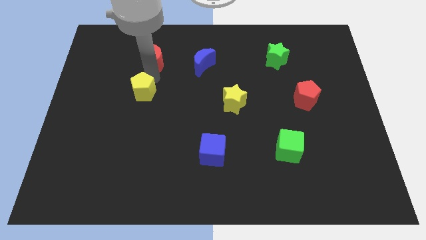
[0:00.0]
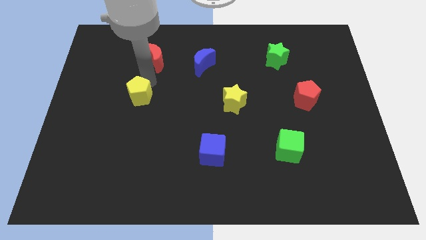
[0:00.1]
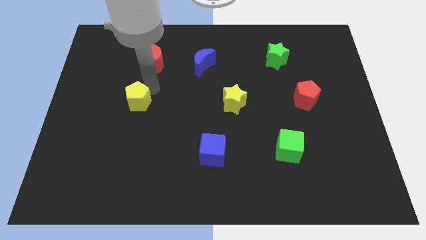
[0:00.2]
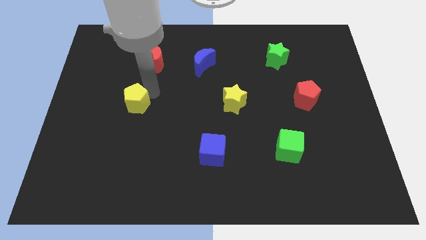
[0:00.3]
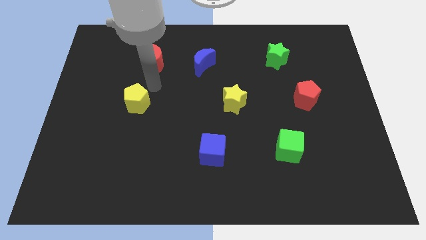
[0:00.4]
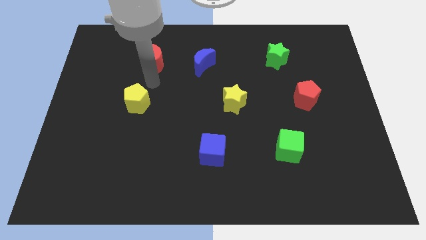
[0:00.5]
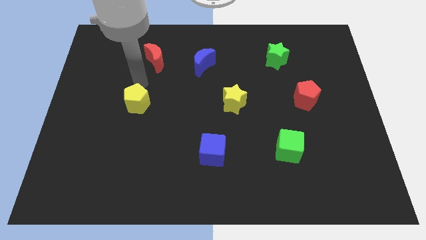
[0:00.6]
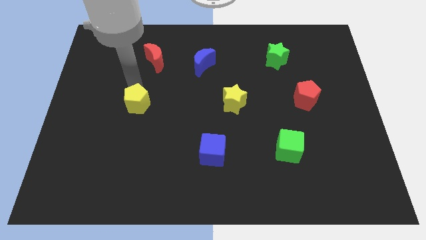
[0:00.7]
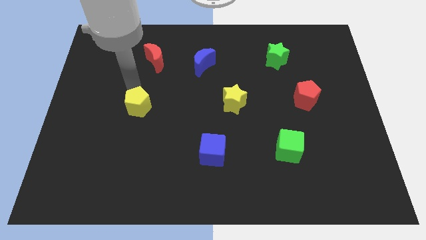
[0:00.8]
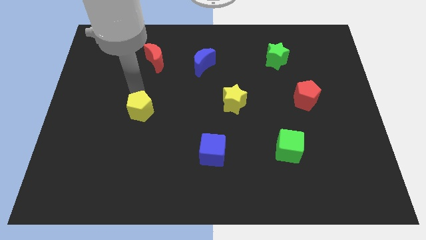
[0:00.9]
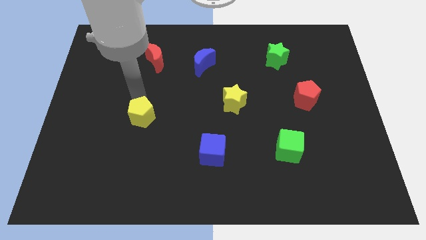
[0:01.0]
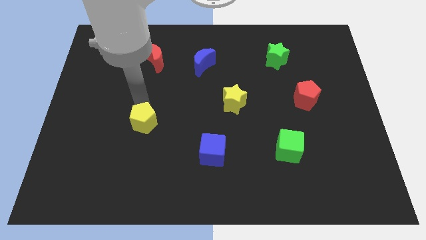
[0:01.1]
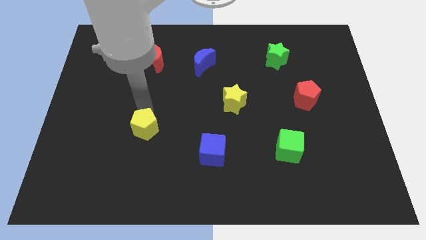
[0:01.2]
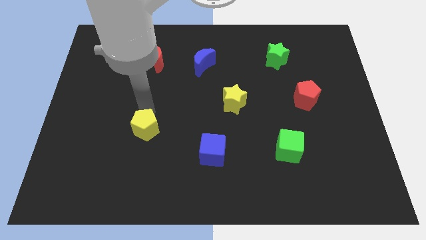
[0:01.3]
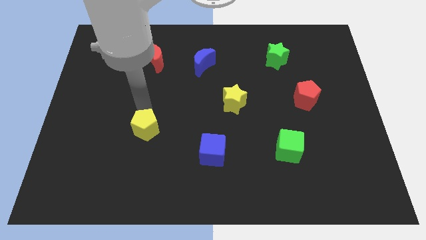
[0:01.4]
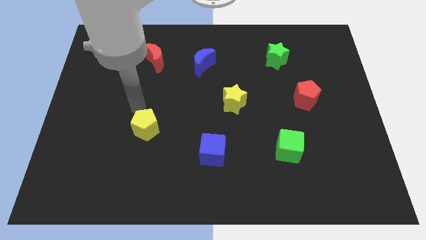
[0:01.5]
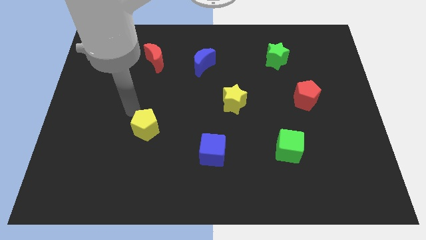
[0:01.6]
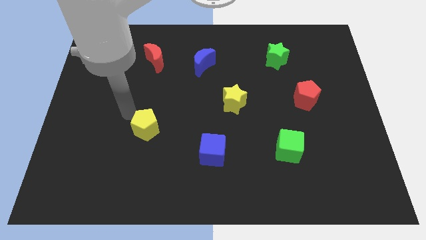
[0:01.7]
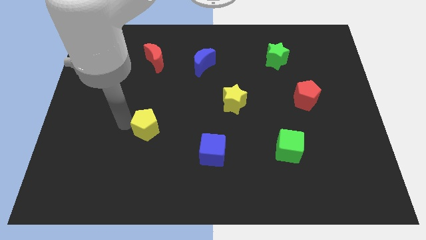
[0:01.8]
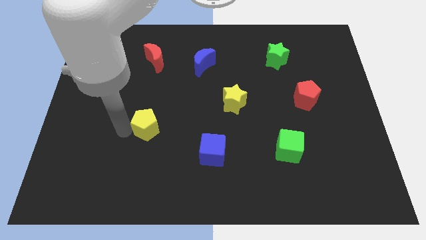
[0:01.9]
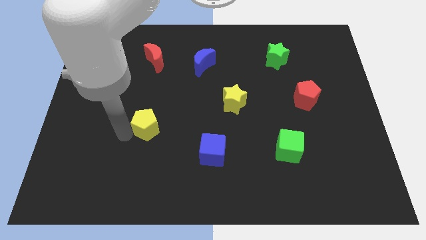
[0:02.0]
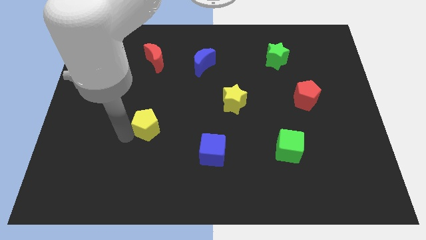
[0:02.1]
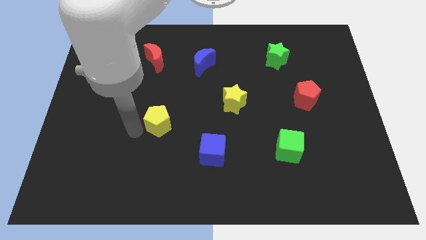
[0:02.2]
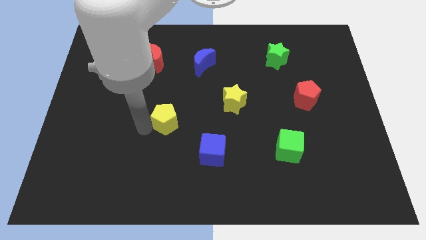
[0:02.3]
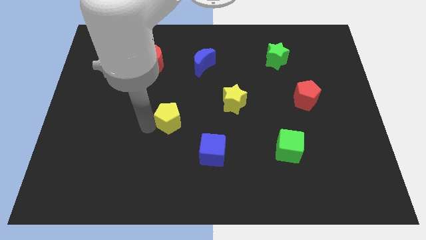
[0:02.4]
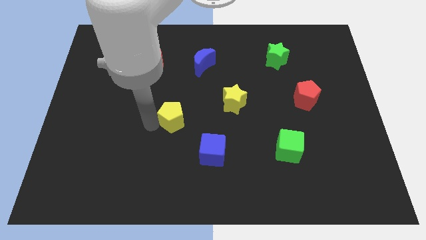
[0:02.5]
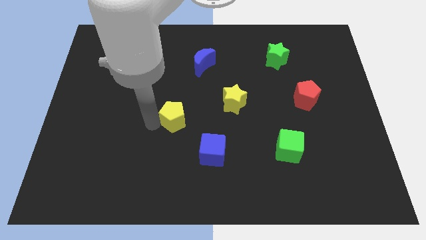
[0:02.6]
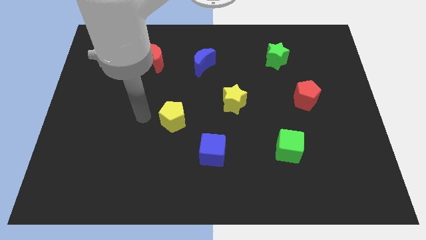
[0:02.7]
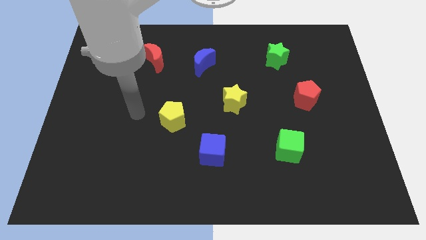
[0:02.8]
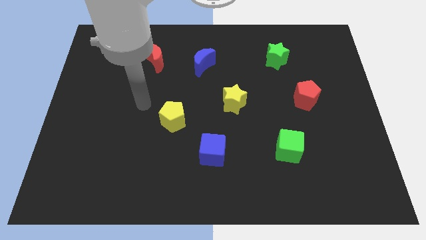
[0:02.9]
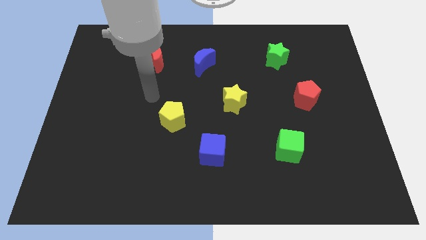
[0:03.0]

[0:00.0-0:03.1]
make a triangle with yellow star yellow pentagon and the blue cube

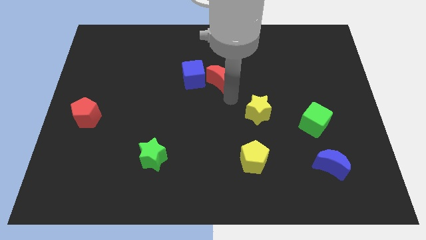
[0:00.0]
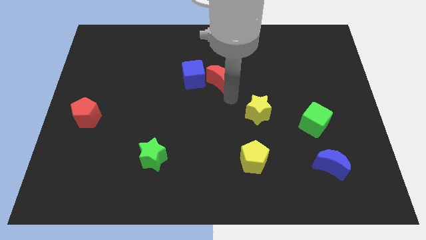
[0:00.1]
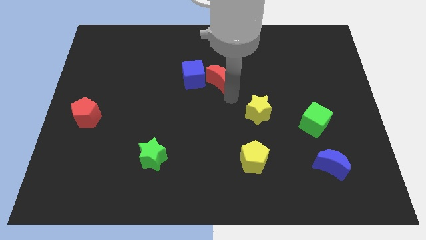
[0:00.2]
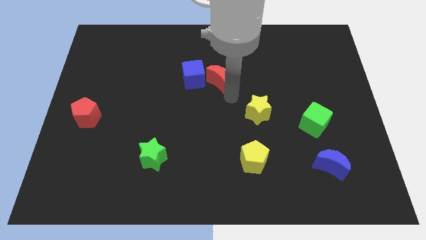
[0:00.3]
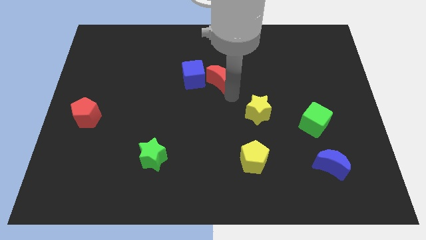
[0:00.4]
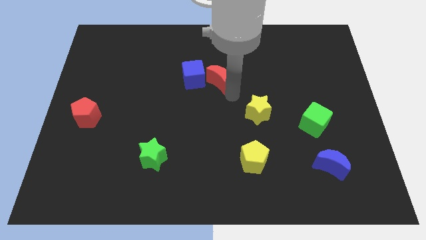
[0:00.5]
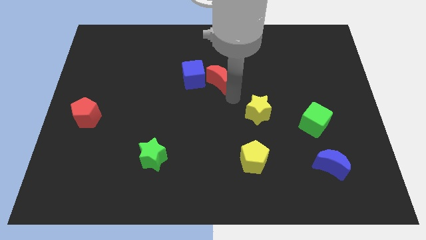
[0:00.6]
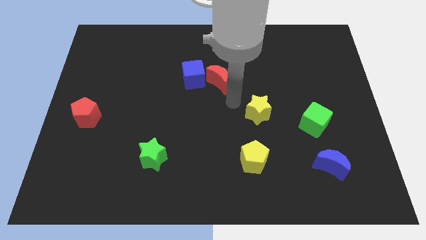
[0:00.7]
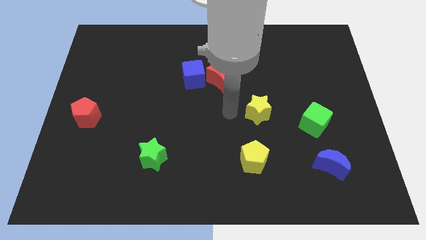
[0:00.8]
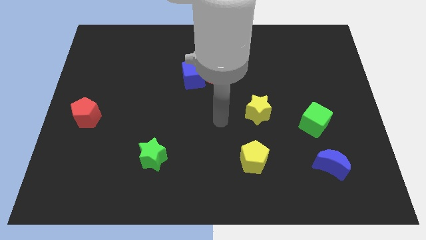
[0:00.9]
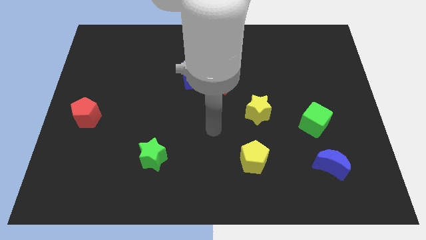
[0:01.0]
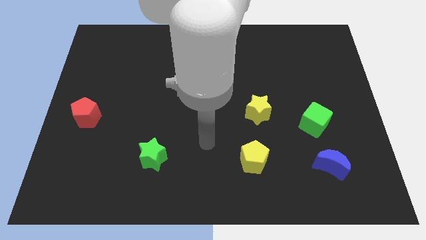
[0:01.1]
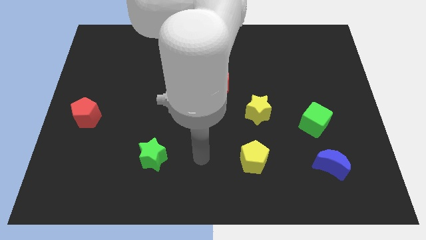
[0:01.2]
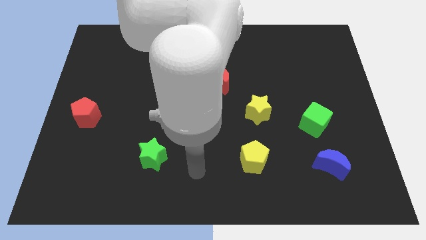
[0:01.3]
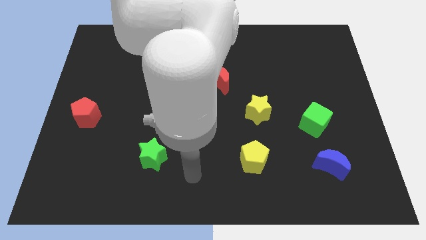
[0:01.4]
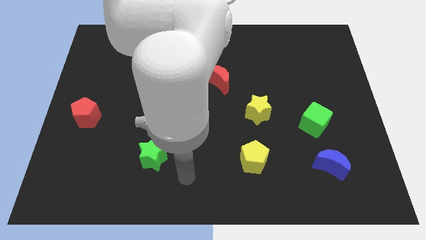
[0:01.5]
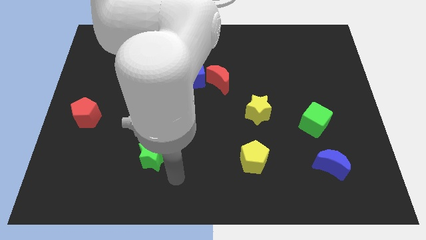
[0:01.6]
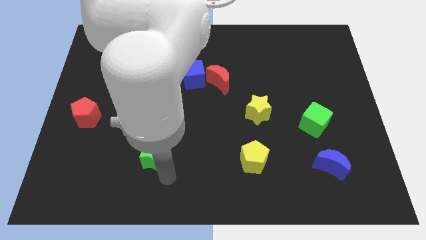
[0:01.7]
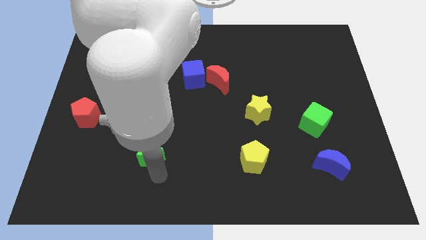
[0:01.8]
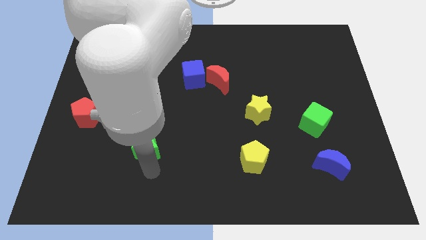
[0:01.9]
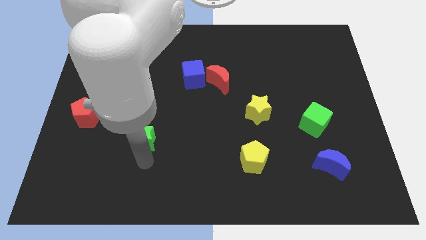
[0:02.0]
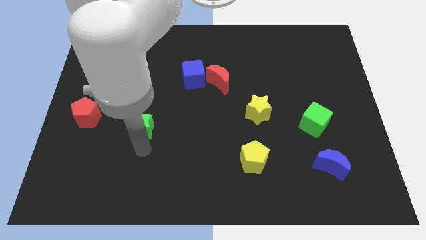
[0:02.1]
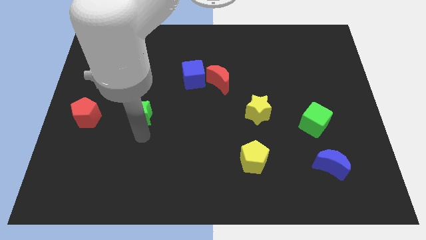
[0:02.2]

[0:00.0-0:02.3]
move the green star right to the red pentagon

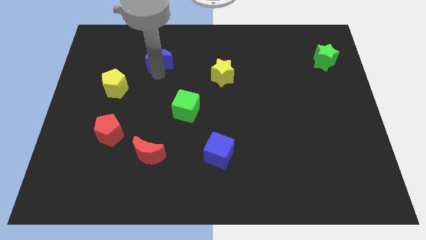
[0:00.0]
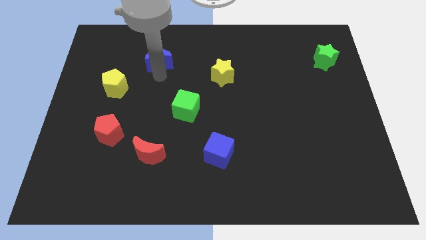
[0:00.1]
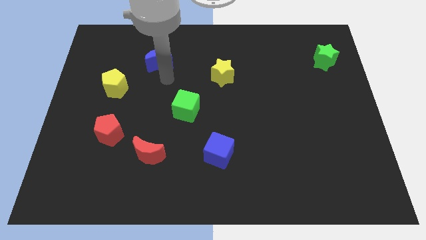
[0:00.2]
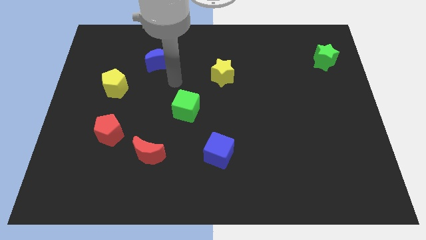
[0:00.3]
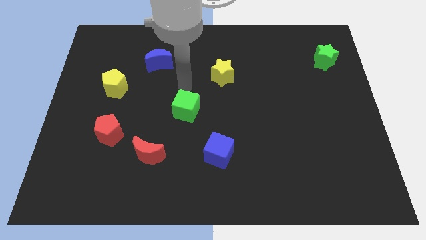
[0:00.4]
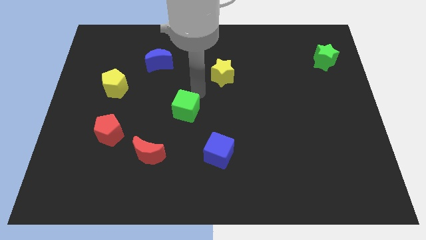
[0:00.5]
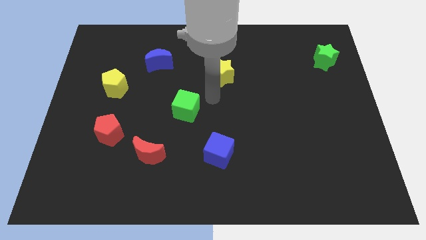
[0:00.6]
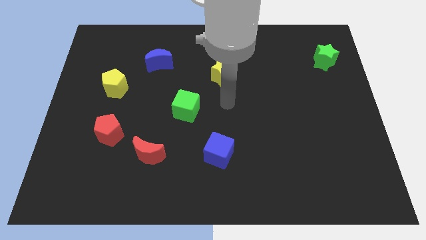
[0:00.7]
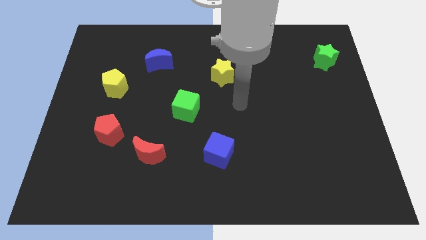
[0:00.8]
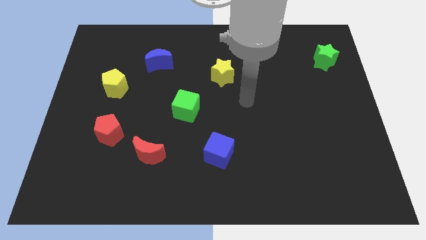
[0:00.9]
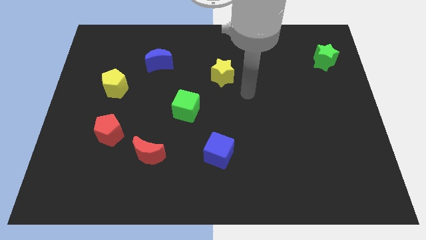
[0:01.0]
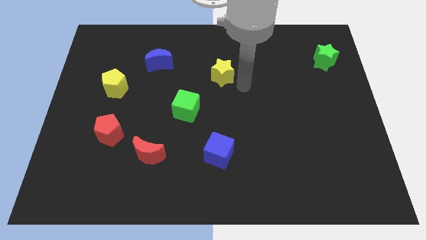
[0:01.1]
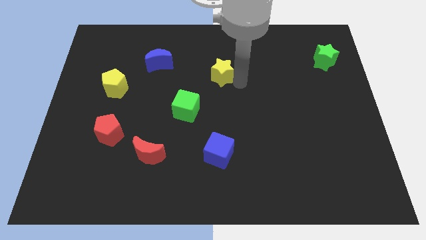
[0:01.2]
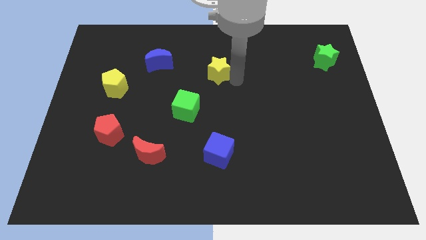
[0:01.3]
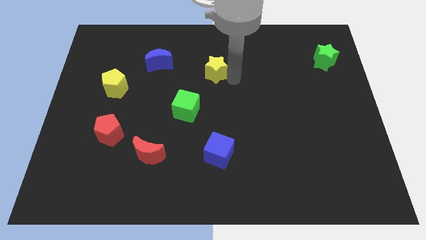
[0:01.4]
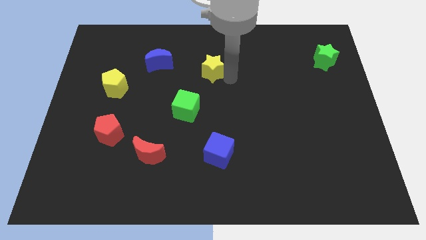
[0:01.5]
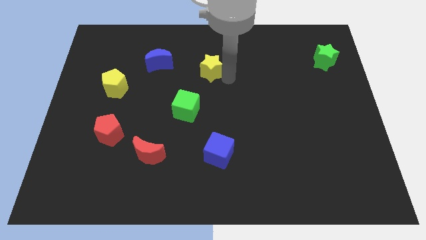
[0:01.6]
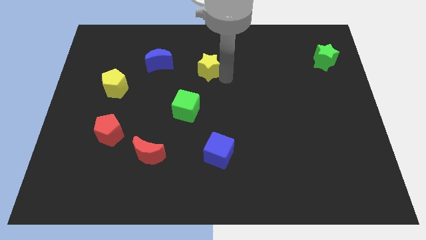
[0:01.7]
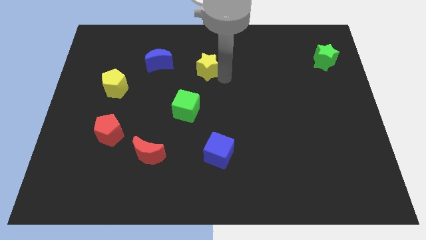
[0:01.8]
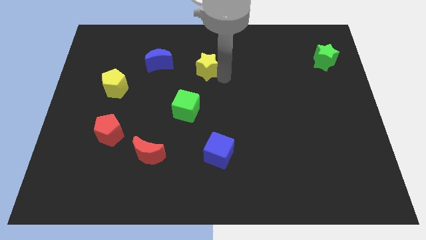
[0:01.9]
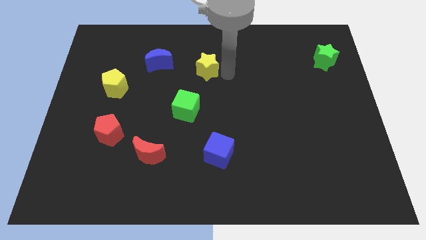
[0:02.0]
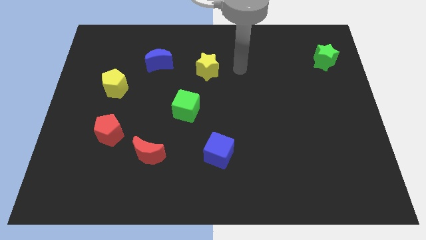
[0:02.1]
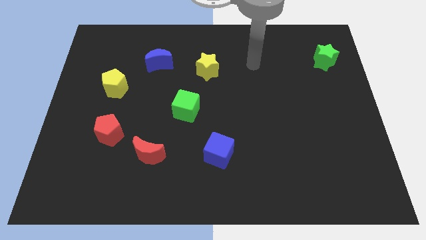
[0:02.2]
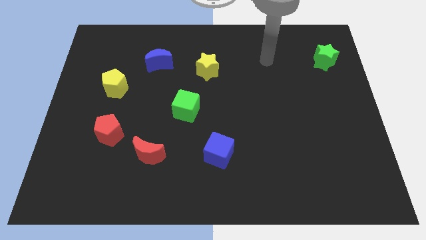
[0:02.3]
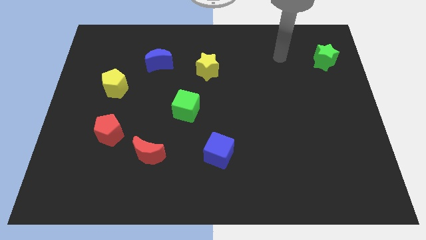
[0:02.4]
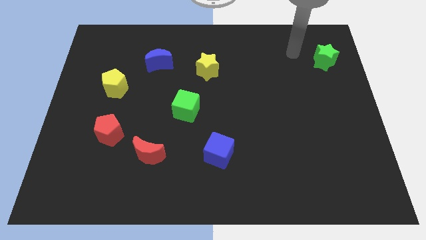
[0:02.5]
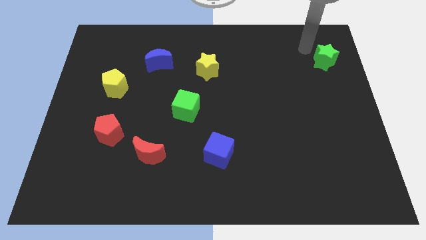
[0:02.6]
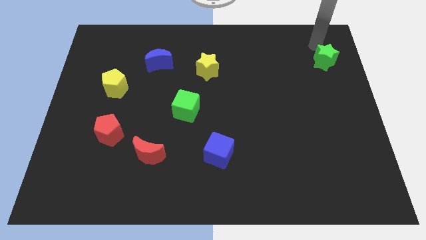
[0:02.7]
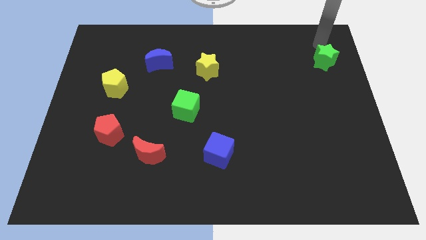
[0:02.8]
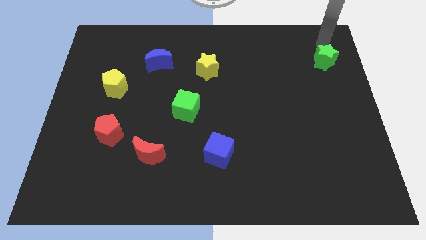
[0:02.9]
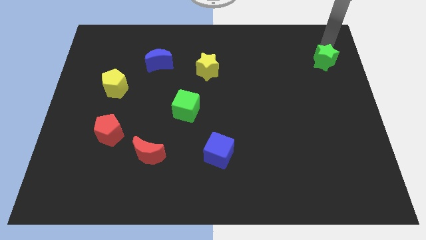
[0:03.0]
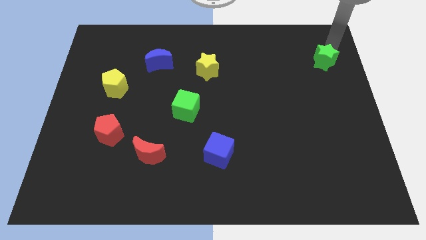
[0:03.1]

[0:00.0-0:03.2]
push the yellow star slightly to the top

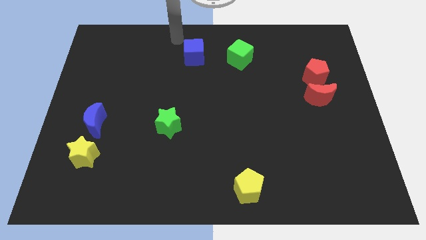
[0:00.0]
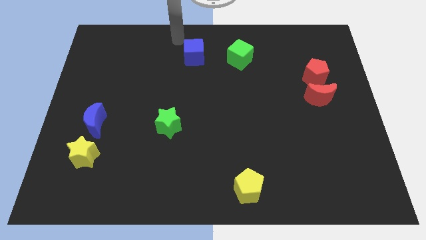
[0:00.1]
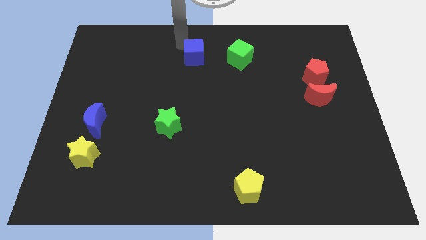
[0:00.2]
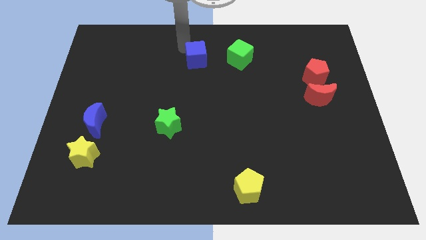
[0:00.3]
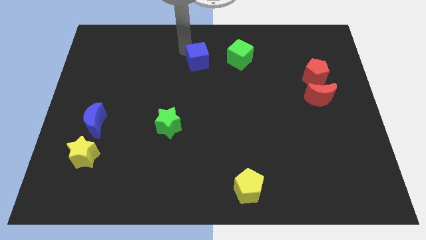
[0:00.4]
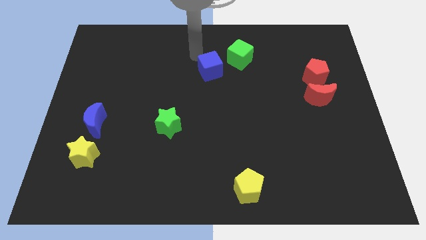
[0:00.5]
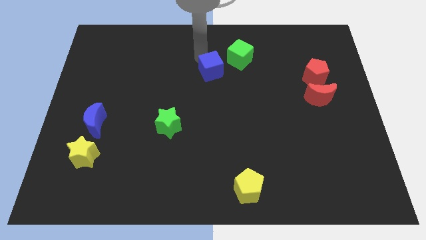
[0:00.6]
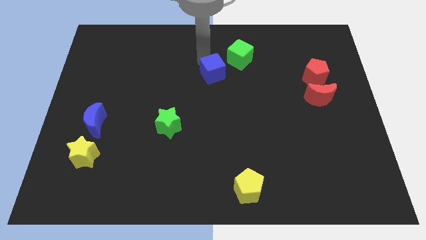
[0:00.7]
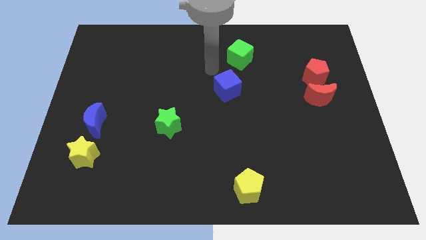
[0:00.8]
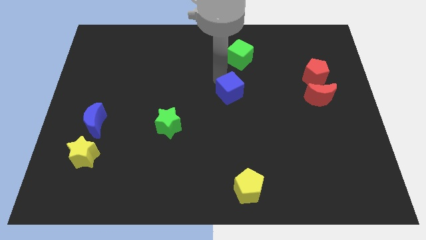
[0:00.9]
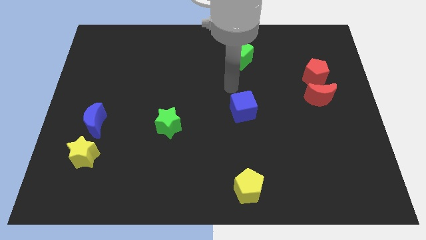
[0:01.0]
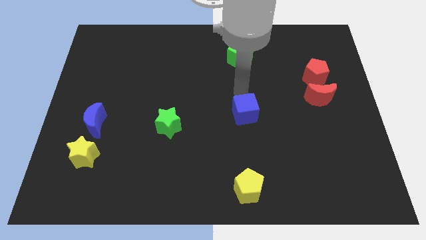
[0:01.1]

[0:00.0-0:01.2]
push the blue cube between the green star and red crescent
